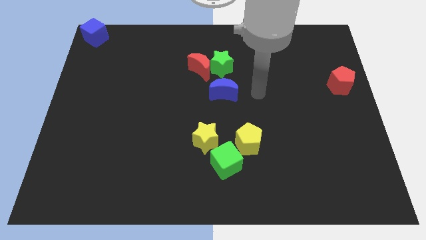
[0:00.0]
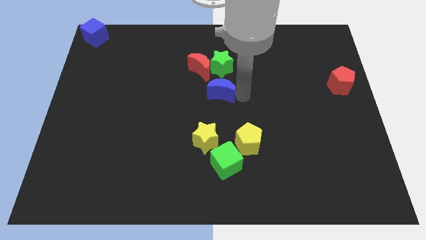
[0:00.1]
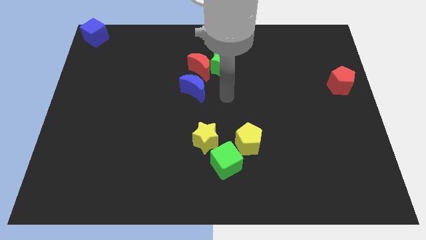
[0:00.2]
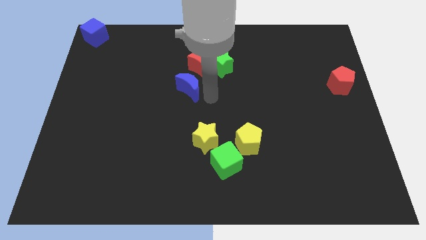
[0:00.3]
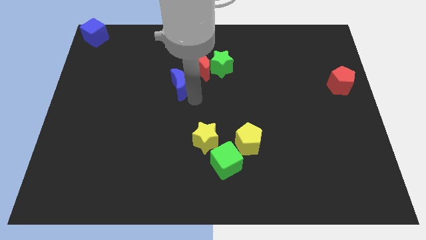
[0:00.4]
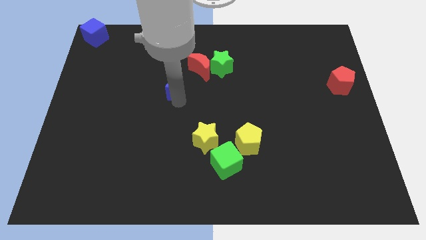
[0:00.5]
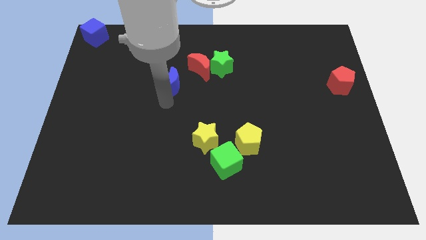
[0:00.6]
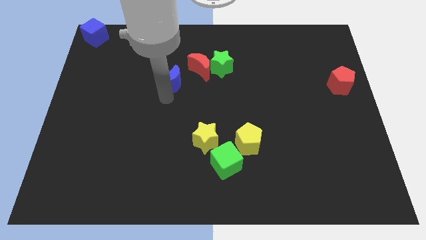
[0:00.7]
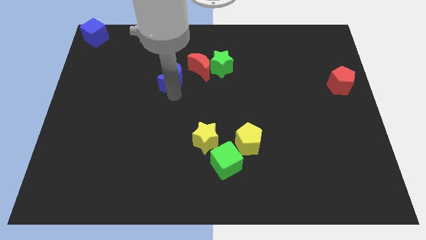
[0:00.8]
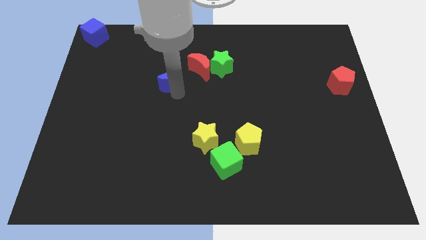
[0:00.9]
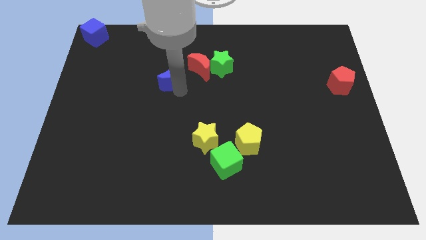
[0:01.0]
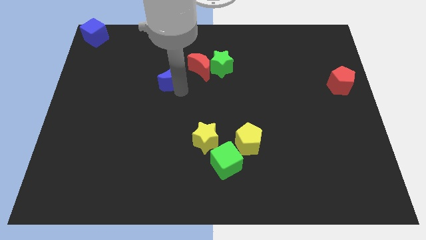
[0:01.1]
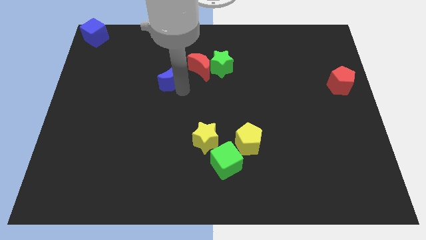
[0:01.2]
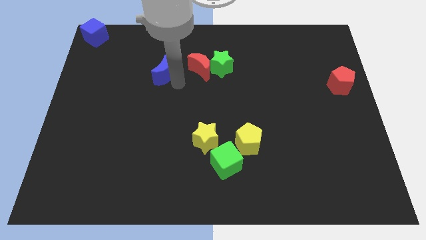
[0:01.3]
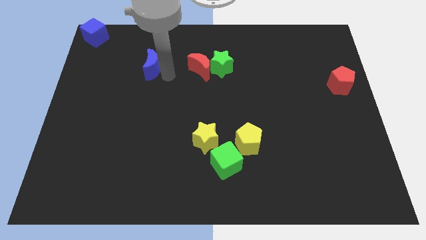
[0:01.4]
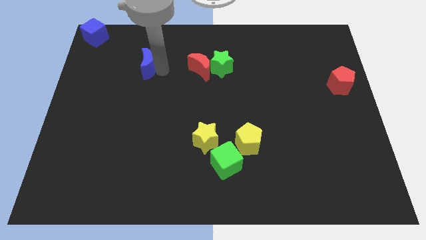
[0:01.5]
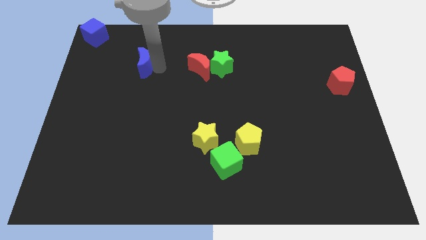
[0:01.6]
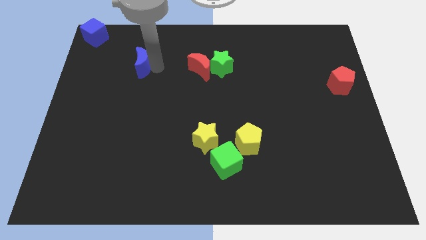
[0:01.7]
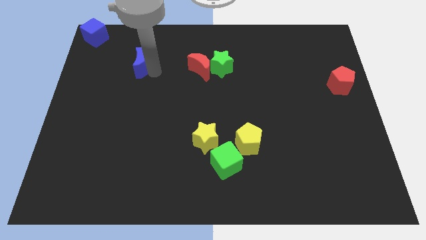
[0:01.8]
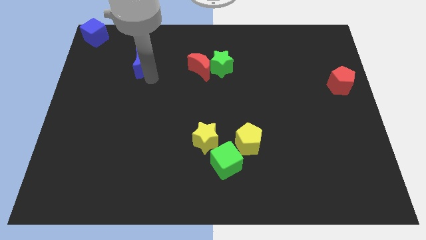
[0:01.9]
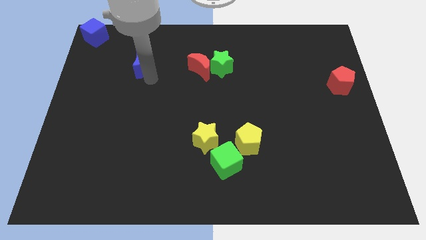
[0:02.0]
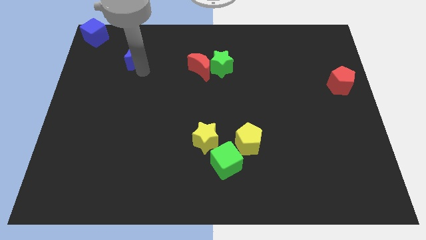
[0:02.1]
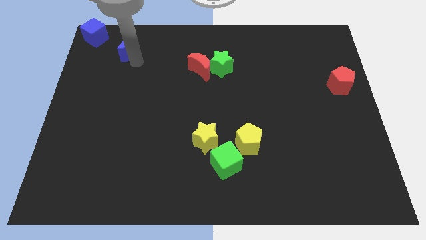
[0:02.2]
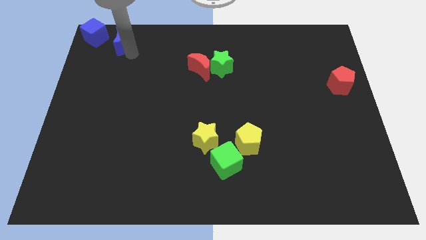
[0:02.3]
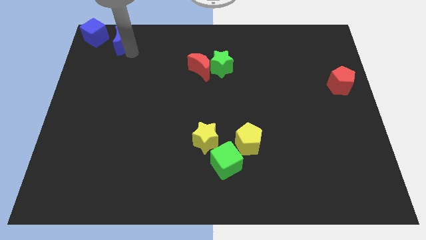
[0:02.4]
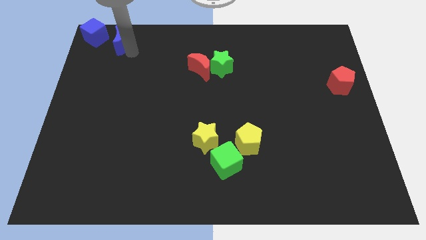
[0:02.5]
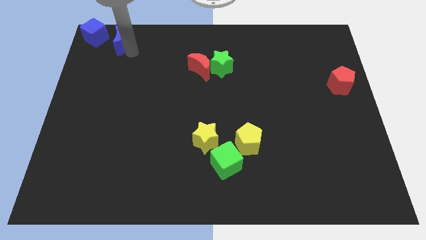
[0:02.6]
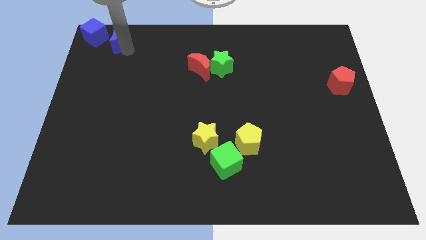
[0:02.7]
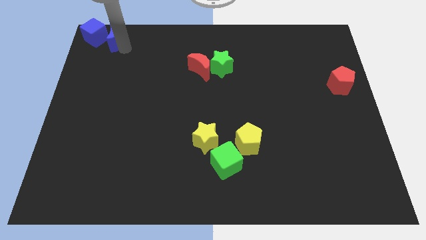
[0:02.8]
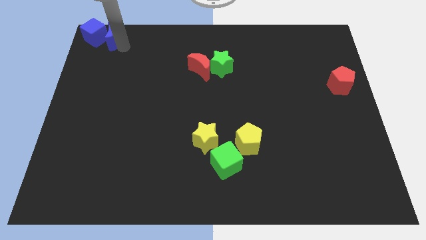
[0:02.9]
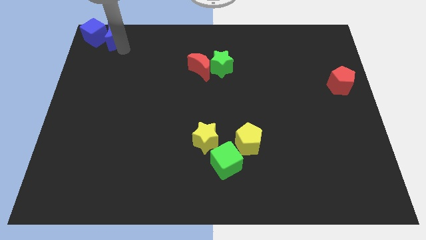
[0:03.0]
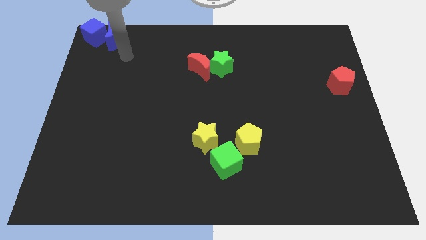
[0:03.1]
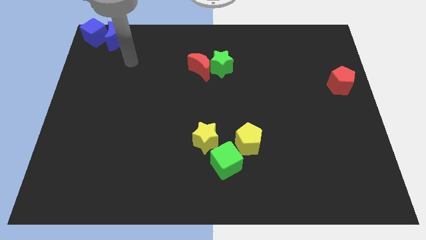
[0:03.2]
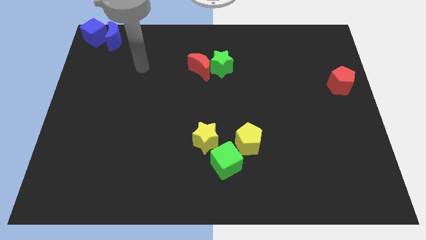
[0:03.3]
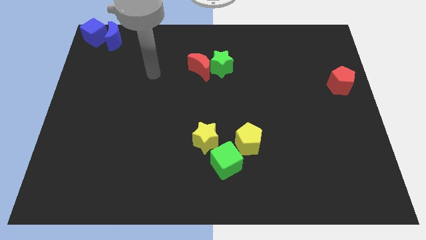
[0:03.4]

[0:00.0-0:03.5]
slide the blue moon towards the blue cube

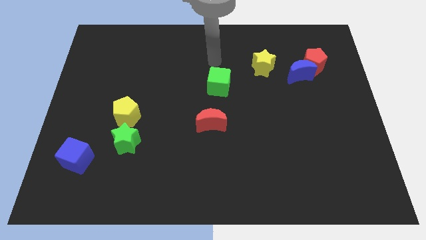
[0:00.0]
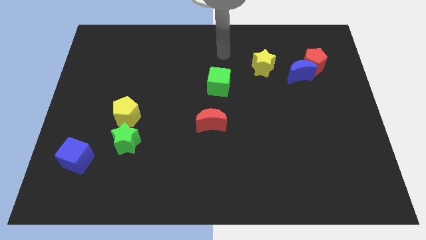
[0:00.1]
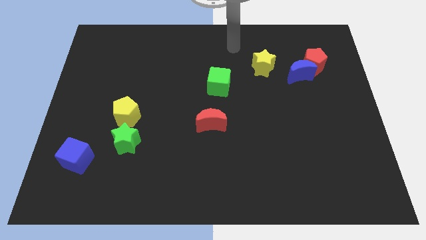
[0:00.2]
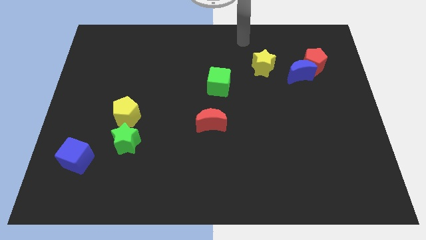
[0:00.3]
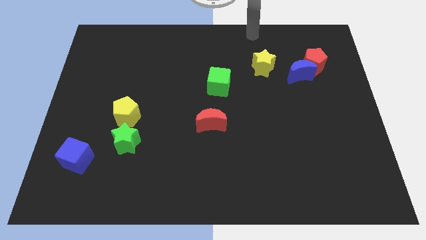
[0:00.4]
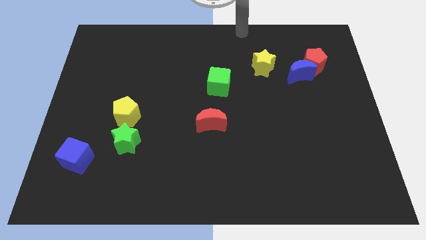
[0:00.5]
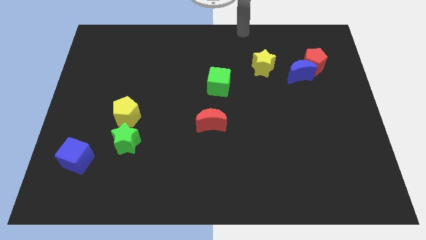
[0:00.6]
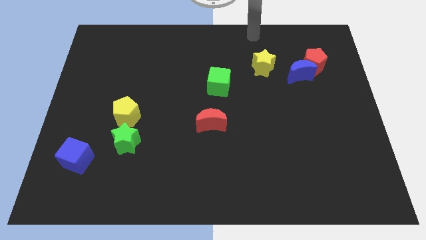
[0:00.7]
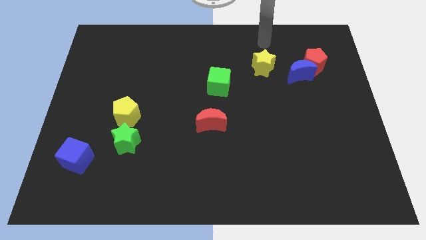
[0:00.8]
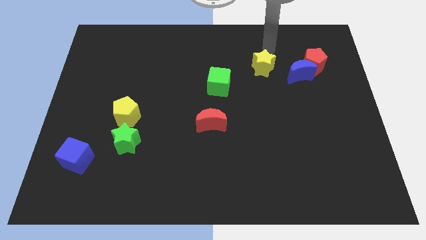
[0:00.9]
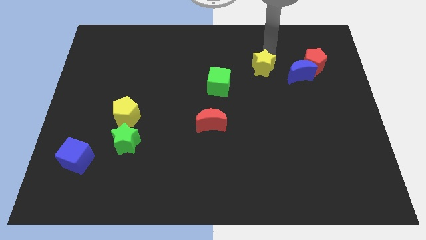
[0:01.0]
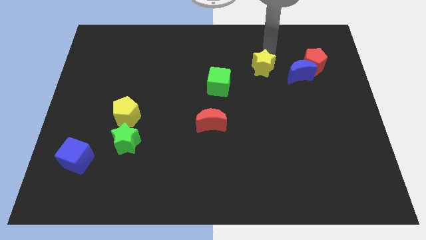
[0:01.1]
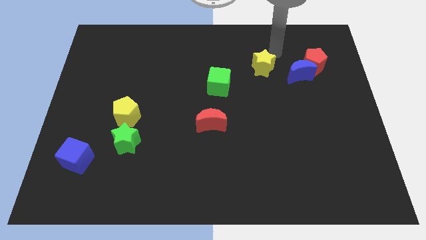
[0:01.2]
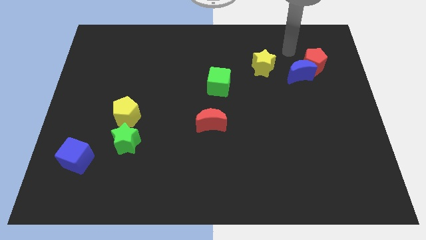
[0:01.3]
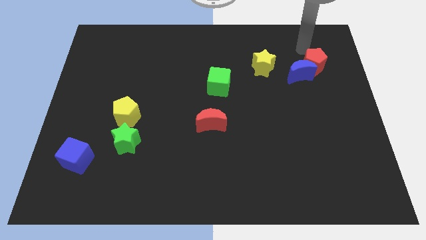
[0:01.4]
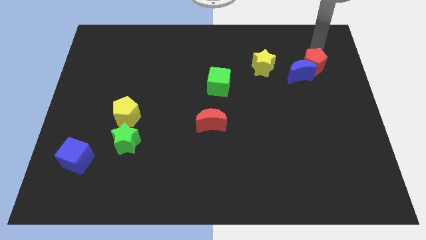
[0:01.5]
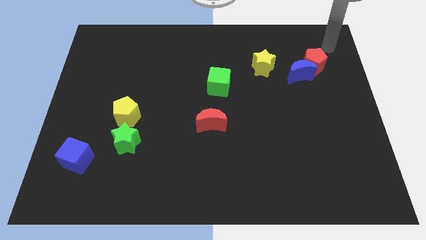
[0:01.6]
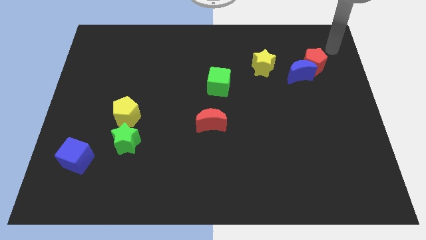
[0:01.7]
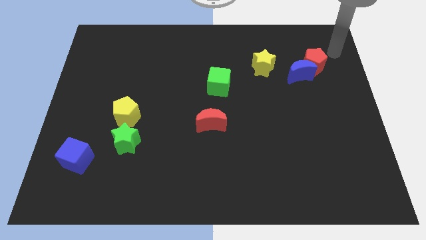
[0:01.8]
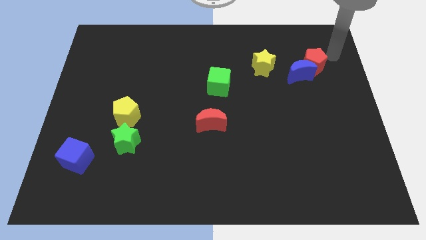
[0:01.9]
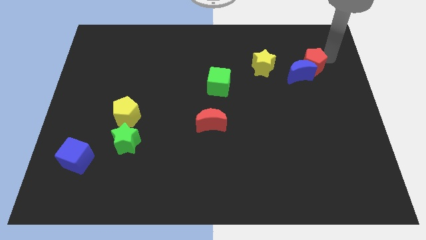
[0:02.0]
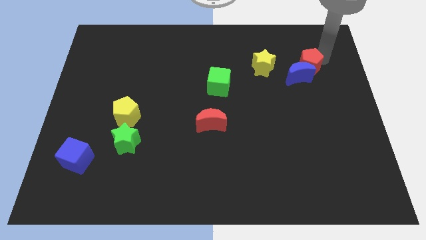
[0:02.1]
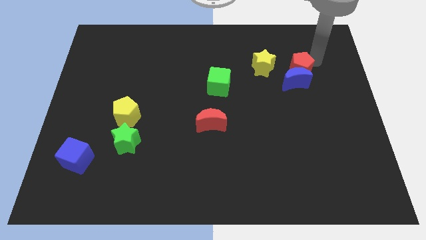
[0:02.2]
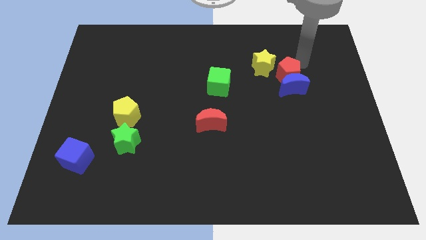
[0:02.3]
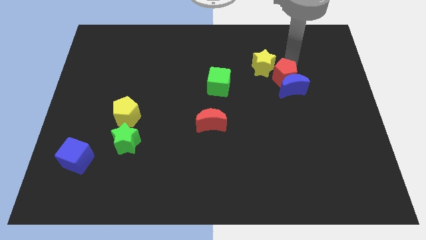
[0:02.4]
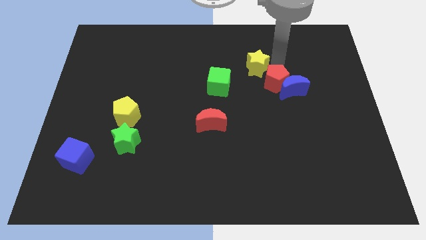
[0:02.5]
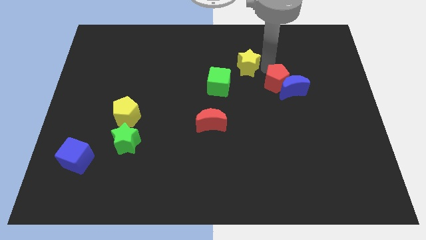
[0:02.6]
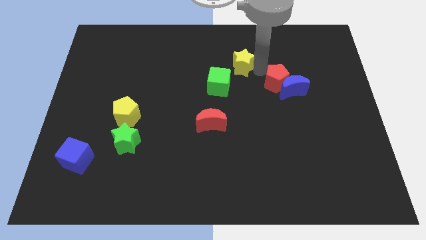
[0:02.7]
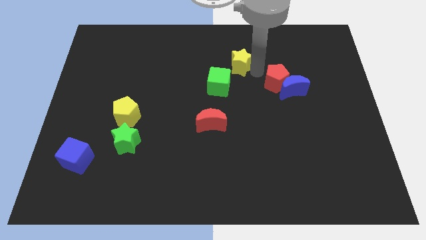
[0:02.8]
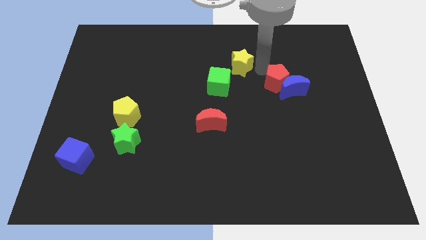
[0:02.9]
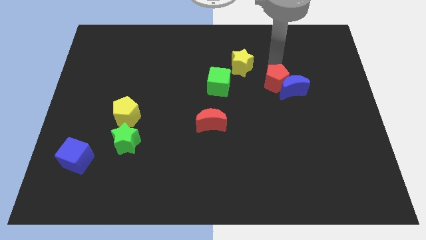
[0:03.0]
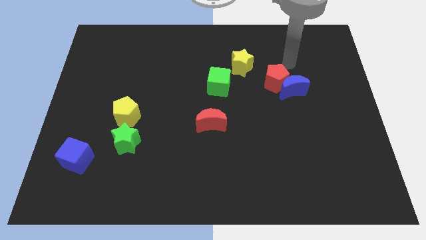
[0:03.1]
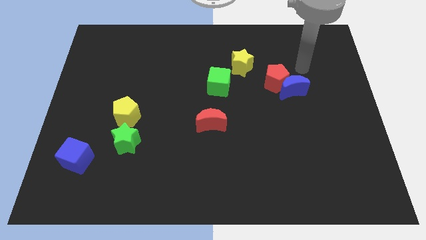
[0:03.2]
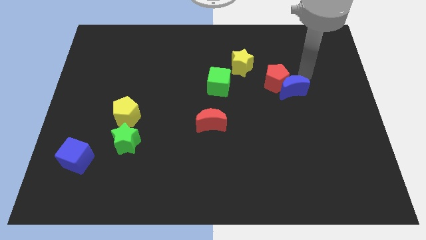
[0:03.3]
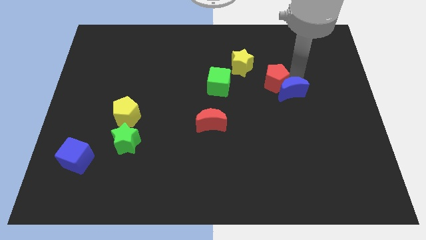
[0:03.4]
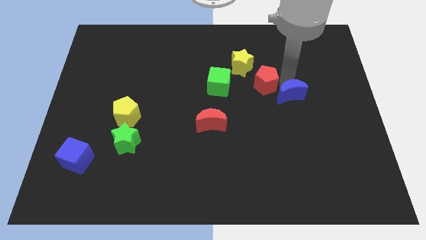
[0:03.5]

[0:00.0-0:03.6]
move the red pentagon diagonally in between the yellow star and blue crescent

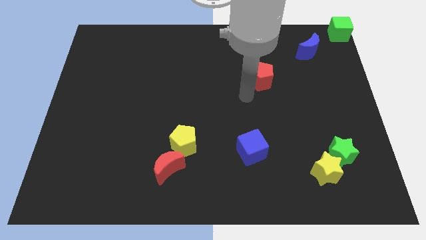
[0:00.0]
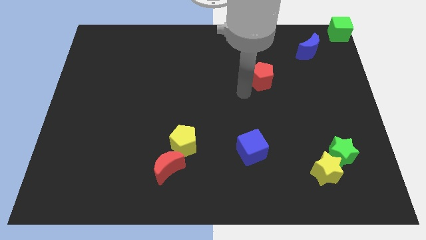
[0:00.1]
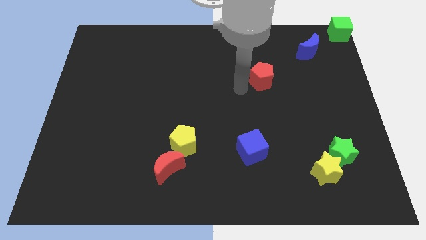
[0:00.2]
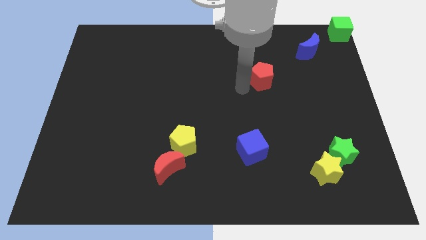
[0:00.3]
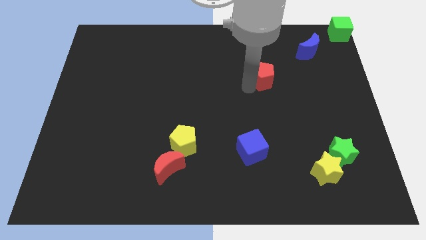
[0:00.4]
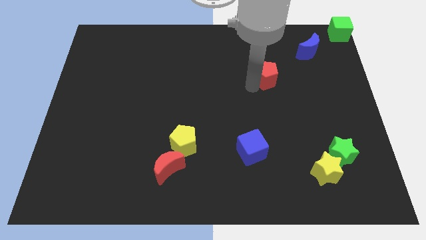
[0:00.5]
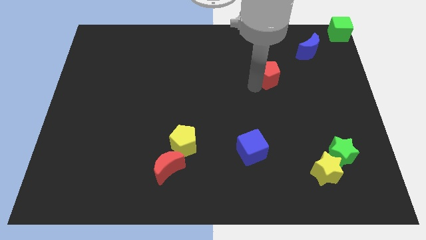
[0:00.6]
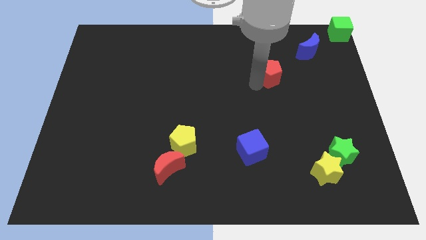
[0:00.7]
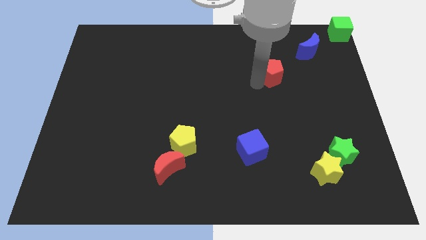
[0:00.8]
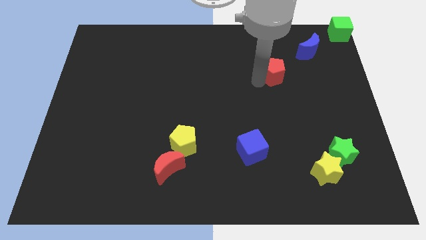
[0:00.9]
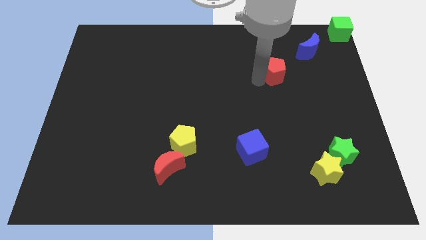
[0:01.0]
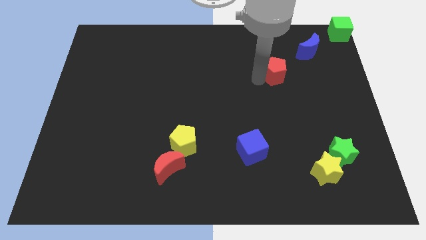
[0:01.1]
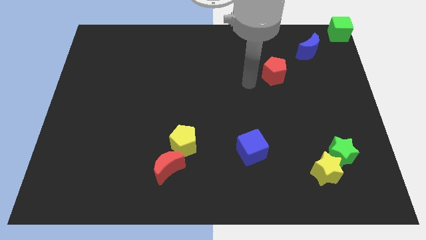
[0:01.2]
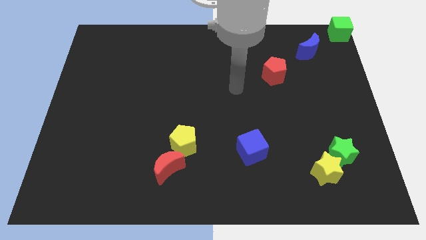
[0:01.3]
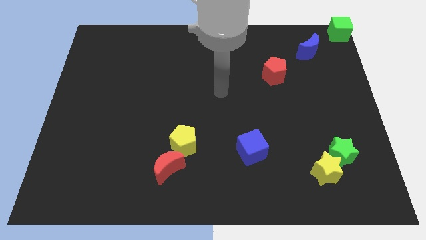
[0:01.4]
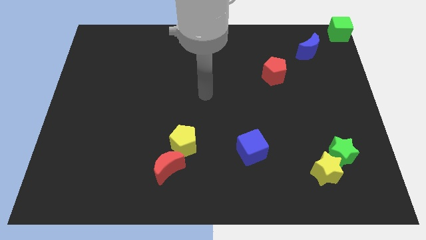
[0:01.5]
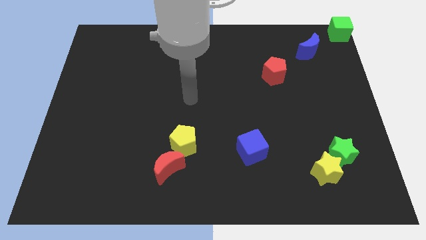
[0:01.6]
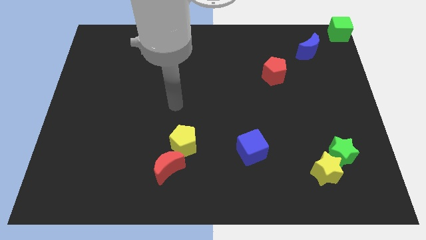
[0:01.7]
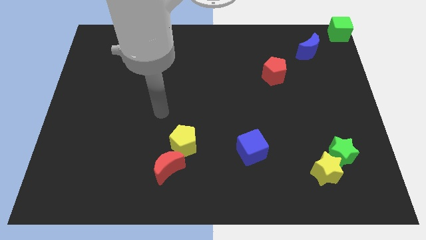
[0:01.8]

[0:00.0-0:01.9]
place the red pentagon diagonal to yellow pentagon
